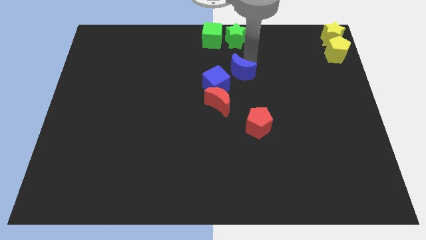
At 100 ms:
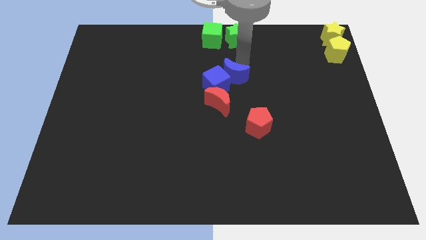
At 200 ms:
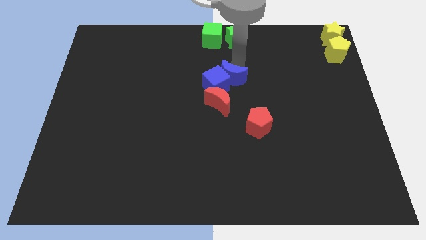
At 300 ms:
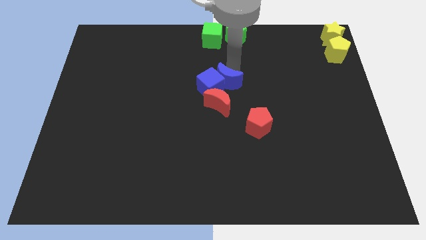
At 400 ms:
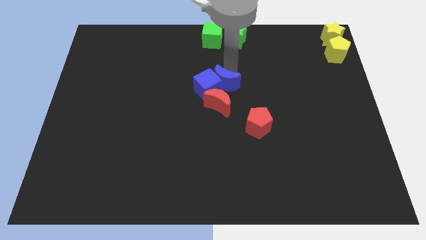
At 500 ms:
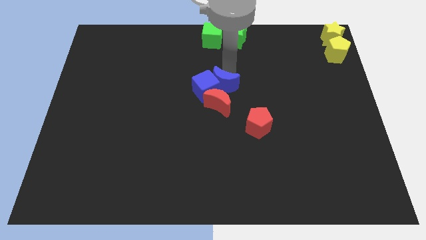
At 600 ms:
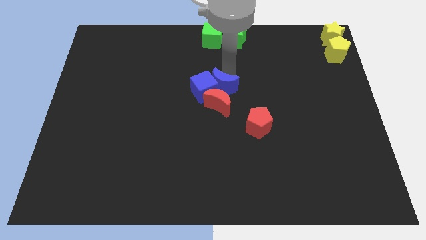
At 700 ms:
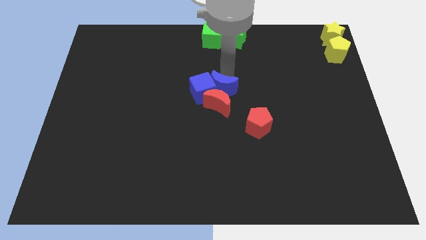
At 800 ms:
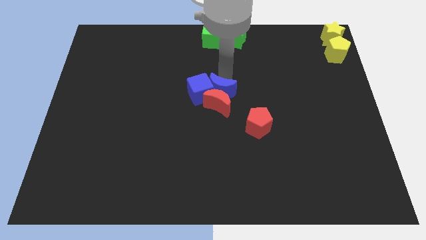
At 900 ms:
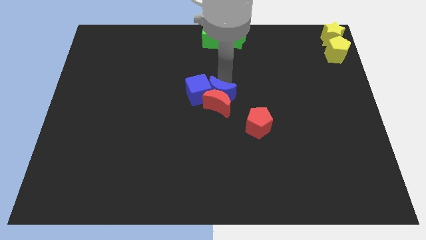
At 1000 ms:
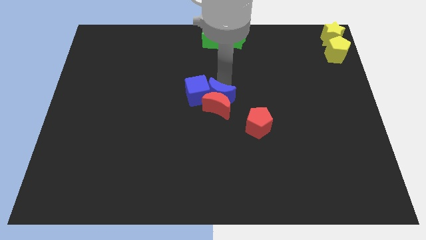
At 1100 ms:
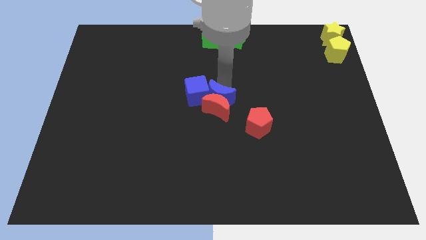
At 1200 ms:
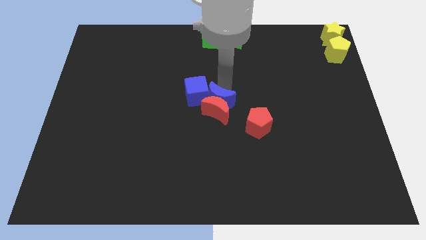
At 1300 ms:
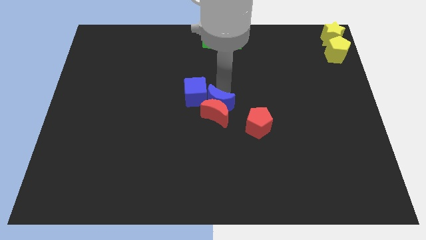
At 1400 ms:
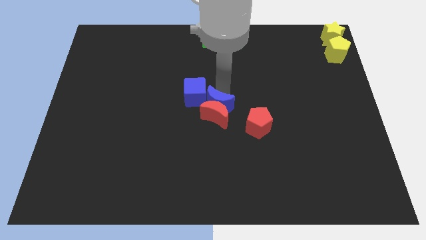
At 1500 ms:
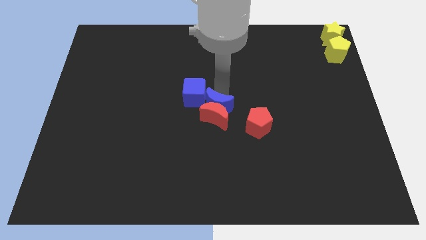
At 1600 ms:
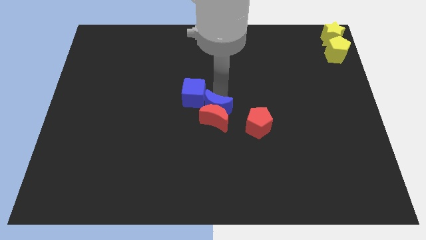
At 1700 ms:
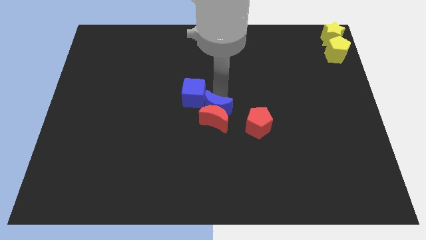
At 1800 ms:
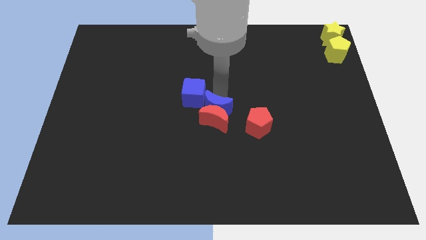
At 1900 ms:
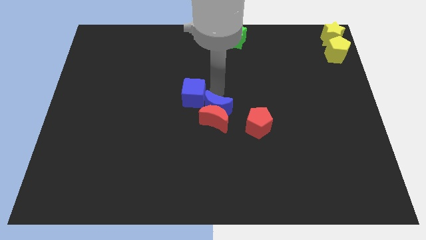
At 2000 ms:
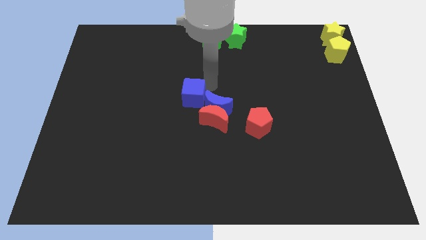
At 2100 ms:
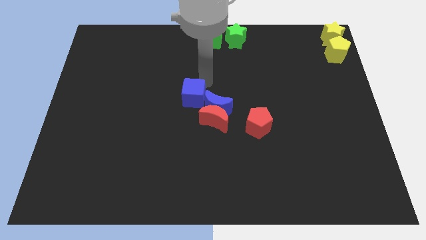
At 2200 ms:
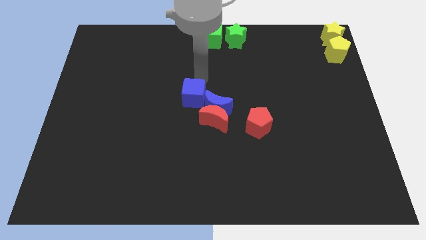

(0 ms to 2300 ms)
push the blue moon into red moon

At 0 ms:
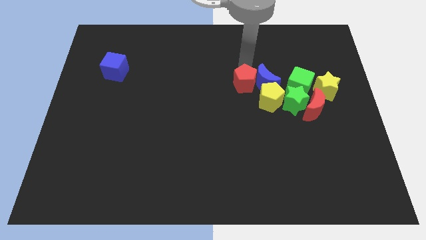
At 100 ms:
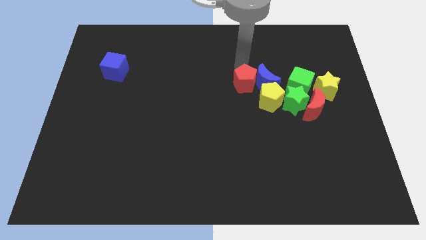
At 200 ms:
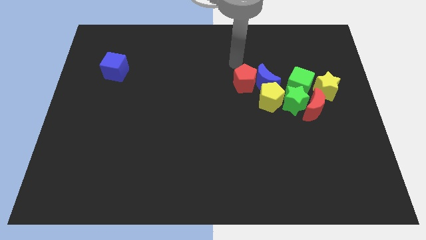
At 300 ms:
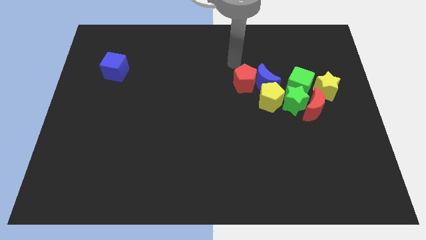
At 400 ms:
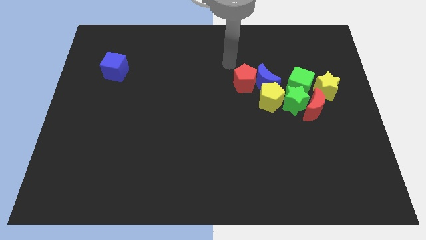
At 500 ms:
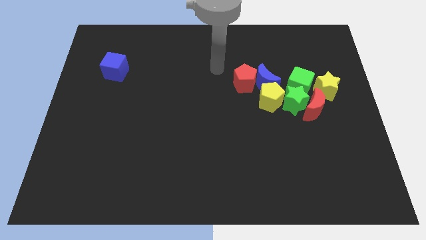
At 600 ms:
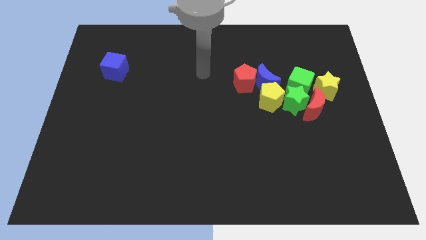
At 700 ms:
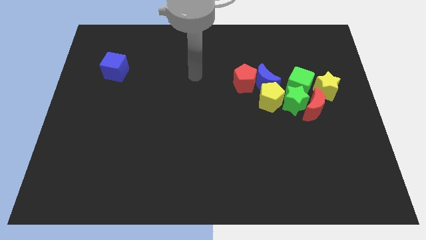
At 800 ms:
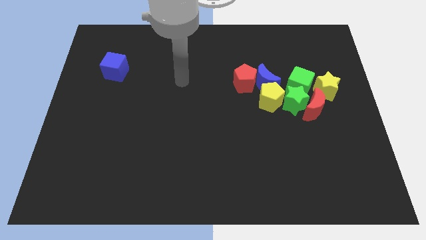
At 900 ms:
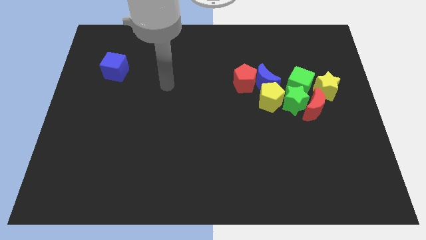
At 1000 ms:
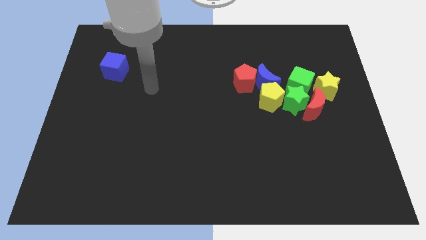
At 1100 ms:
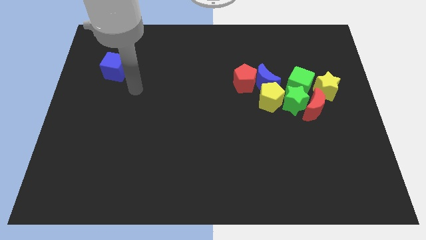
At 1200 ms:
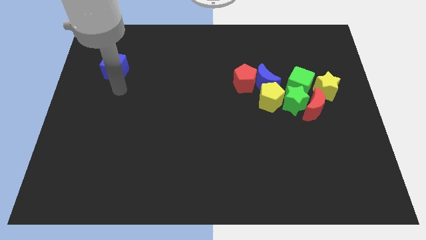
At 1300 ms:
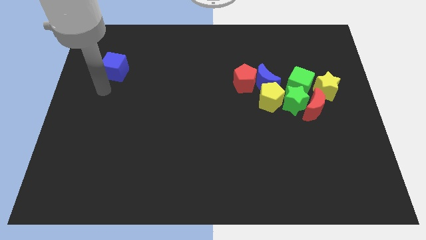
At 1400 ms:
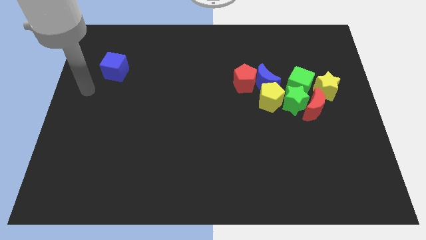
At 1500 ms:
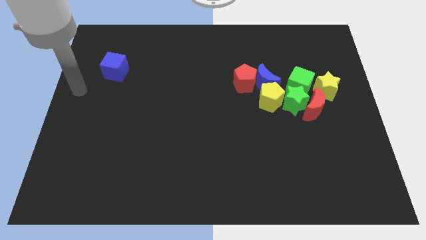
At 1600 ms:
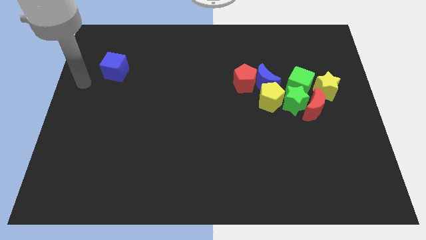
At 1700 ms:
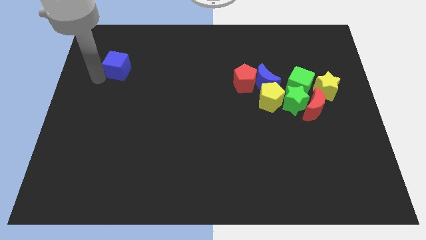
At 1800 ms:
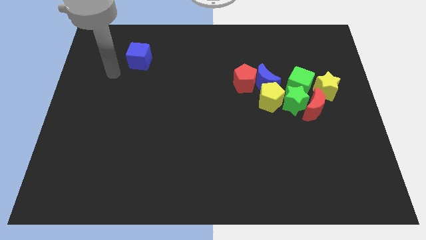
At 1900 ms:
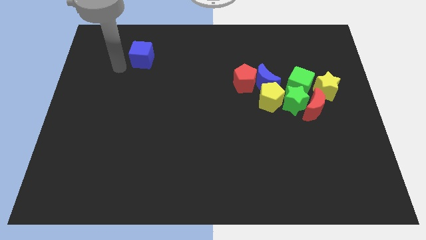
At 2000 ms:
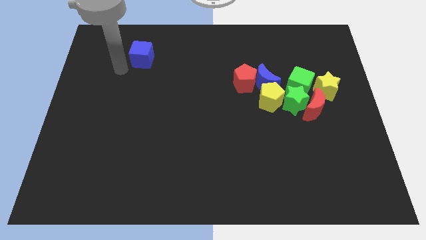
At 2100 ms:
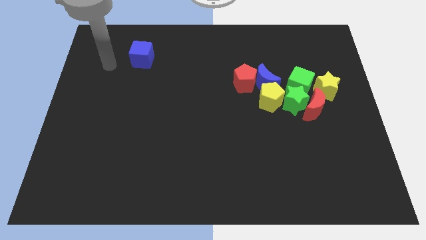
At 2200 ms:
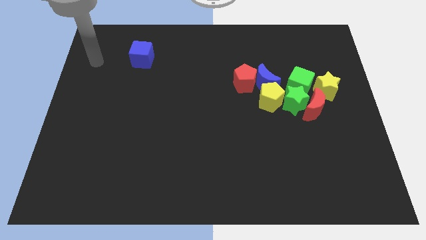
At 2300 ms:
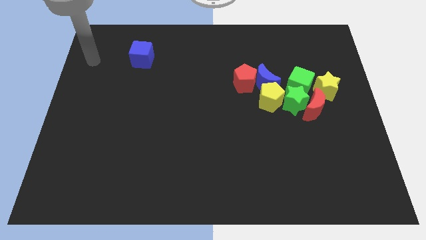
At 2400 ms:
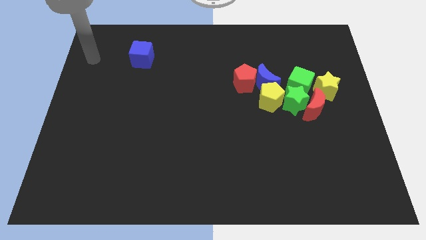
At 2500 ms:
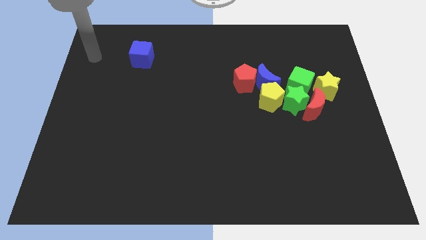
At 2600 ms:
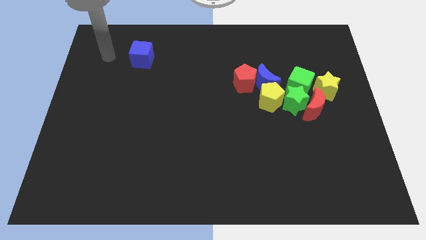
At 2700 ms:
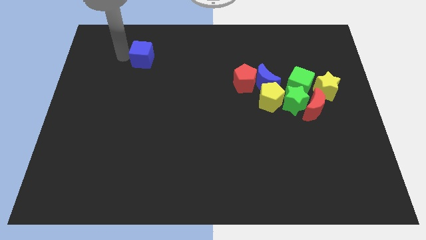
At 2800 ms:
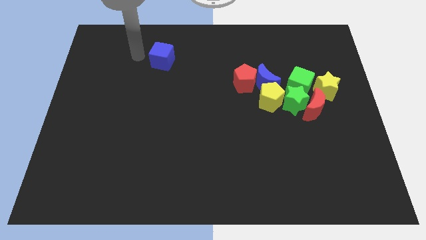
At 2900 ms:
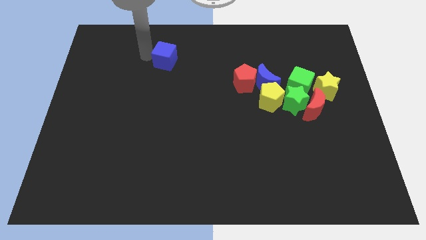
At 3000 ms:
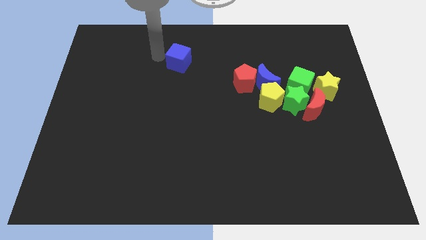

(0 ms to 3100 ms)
slide the blue cube towards the red pentagon

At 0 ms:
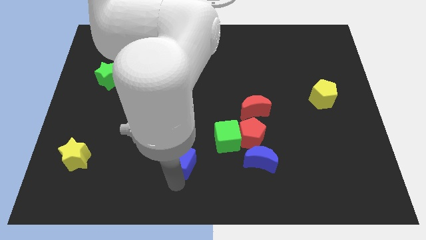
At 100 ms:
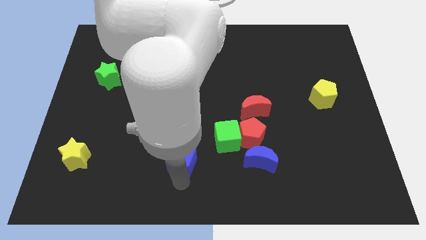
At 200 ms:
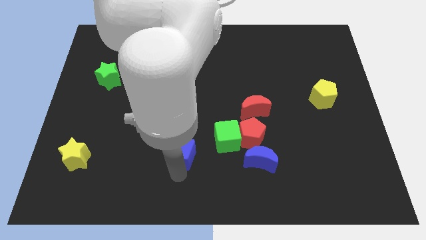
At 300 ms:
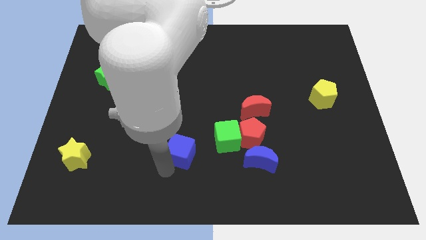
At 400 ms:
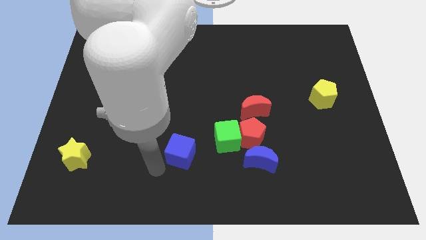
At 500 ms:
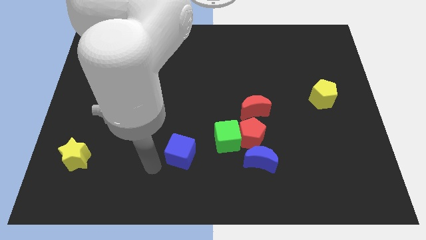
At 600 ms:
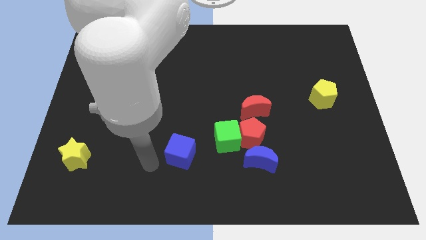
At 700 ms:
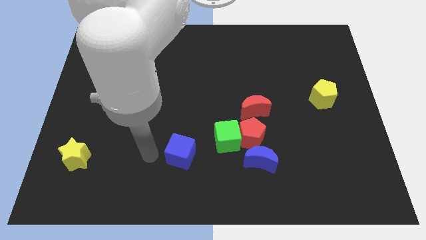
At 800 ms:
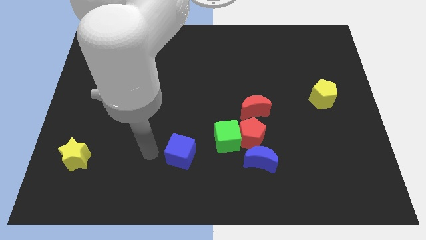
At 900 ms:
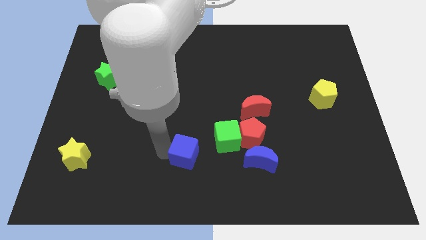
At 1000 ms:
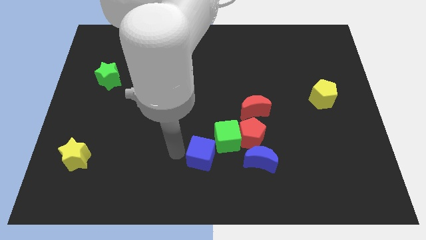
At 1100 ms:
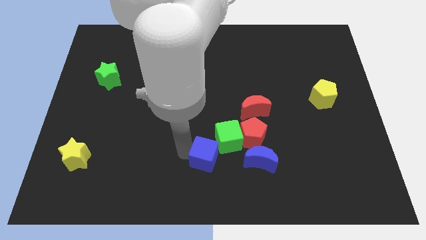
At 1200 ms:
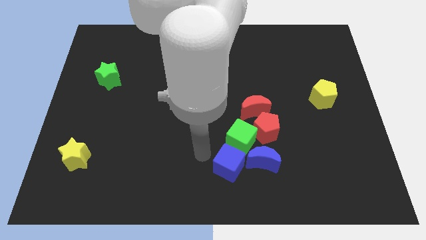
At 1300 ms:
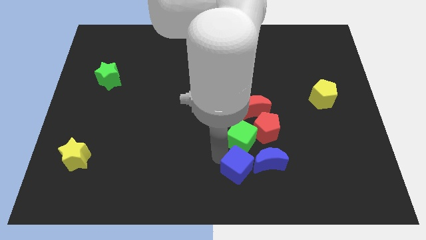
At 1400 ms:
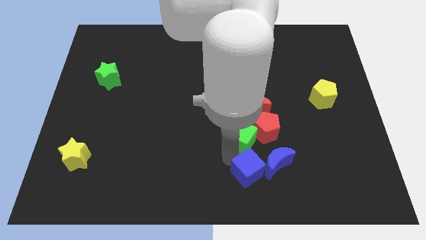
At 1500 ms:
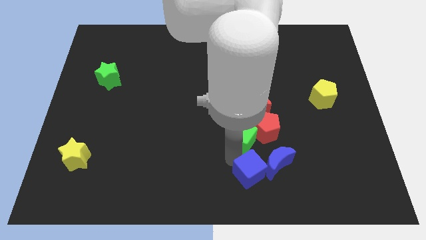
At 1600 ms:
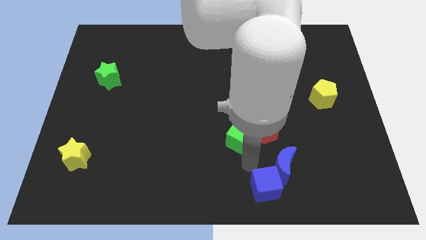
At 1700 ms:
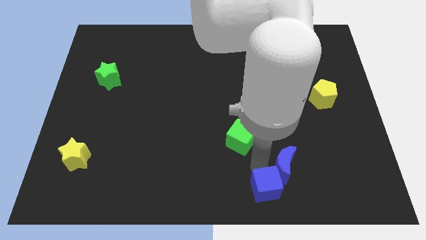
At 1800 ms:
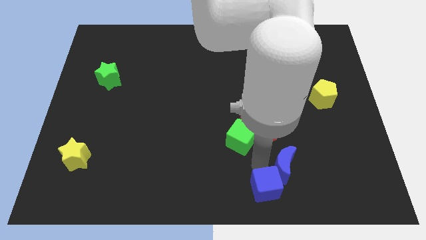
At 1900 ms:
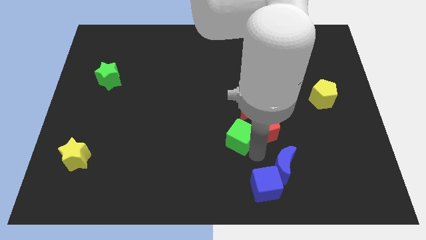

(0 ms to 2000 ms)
slide the blue cube into the blue moon

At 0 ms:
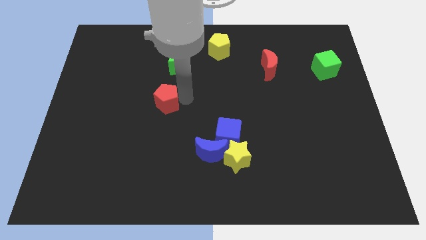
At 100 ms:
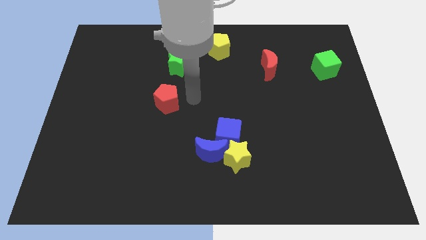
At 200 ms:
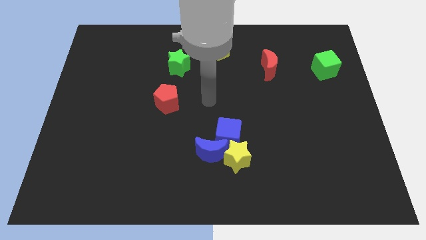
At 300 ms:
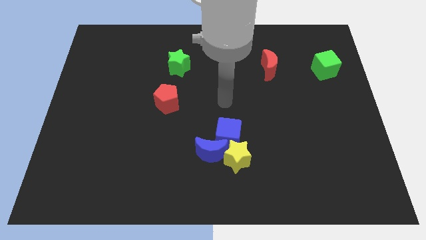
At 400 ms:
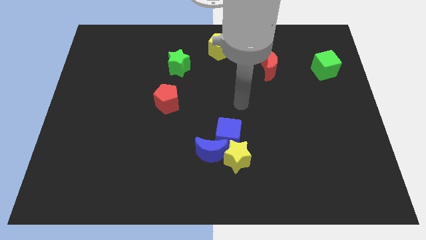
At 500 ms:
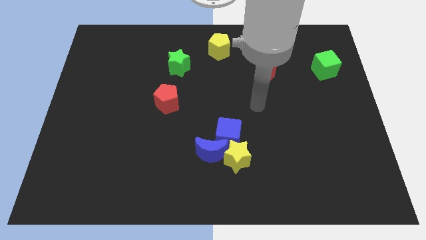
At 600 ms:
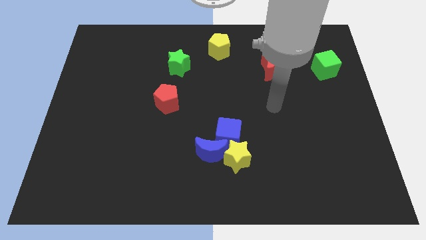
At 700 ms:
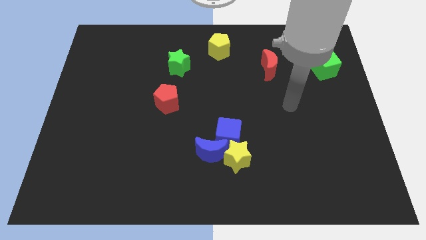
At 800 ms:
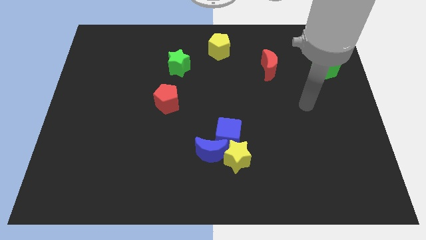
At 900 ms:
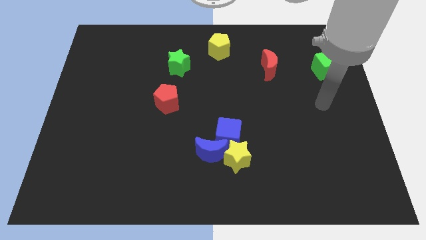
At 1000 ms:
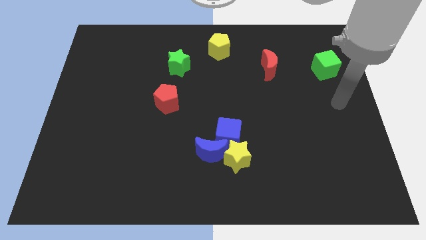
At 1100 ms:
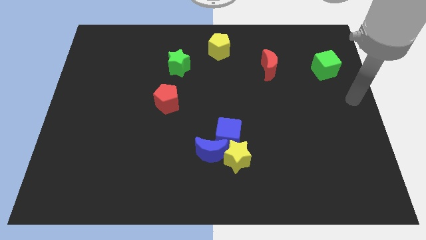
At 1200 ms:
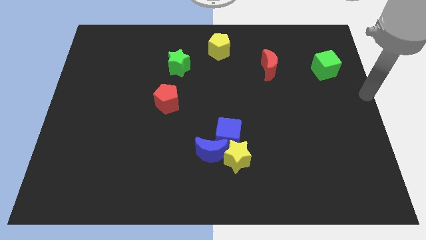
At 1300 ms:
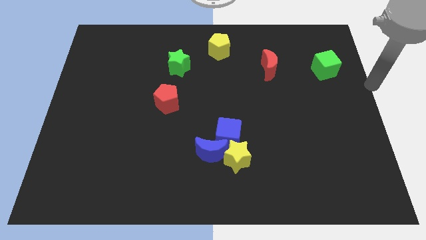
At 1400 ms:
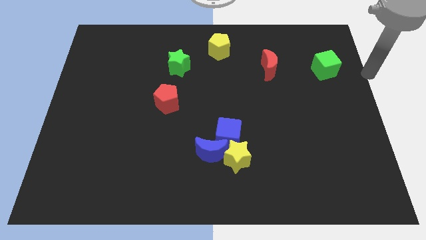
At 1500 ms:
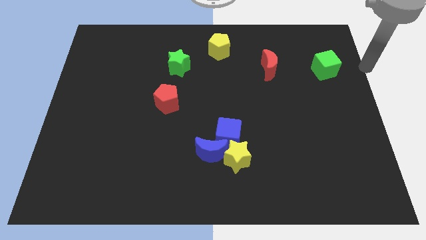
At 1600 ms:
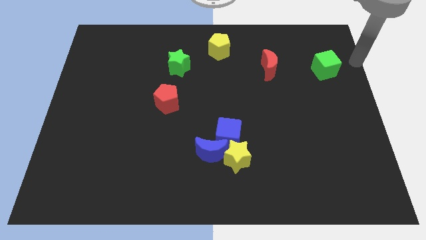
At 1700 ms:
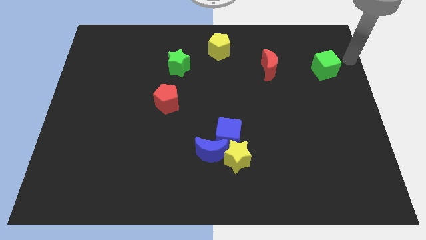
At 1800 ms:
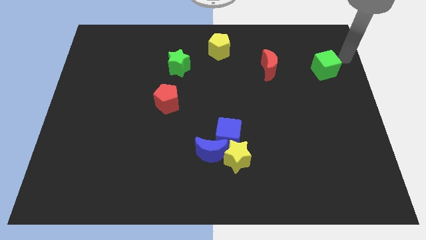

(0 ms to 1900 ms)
point your arm at the right of the green cube
